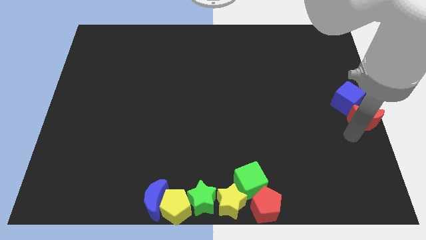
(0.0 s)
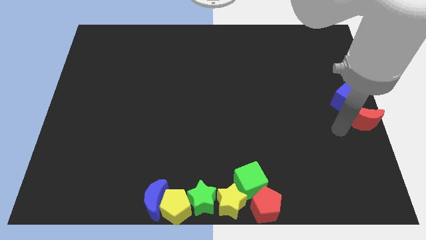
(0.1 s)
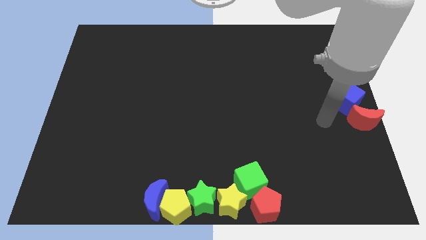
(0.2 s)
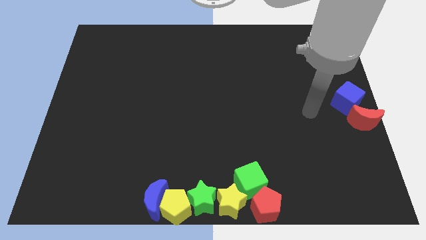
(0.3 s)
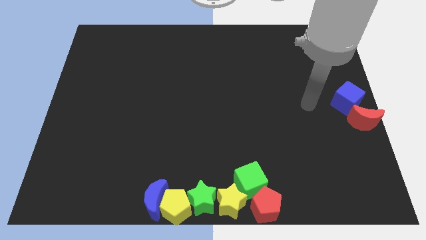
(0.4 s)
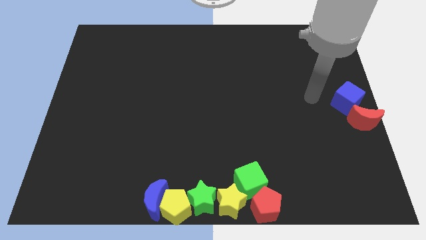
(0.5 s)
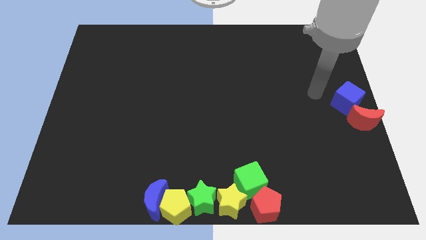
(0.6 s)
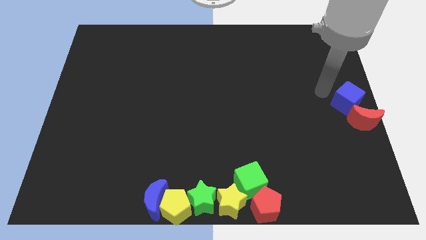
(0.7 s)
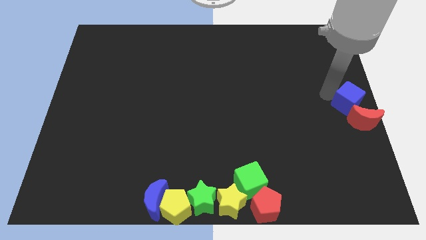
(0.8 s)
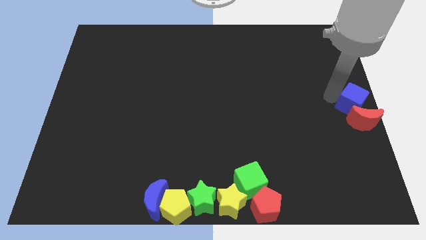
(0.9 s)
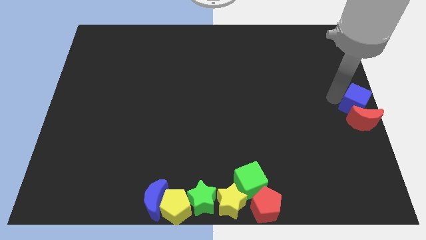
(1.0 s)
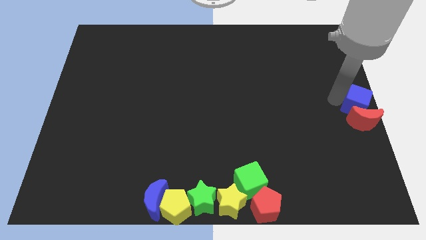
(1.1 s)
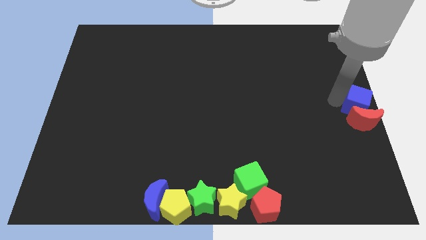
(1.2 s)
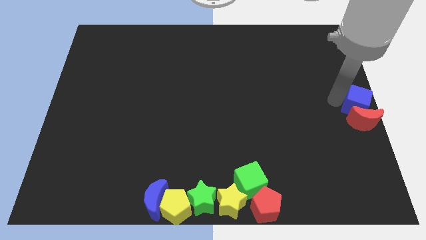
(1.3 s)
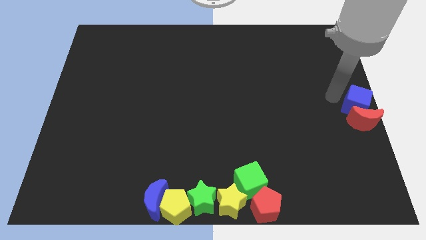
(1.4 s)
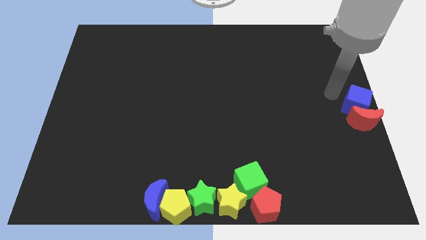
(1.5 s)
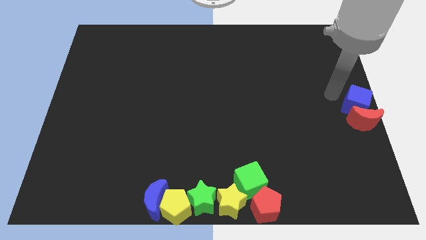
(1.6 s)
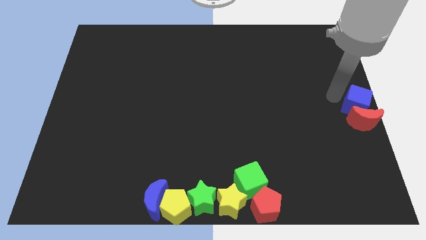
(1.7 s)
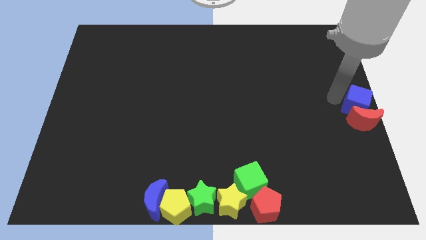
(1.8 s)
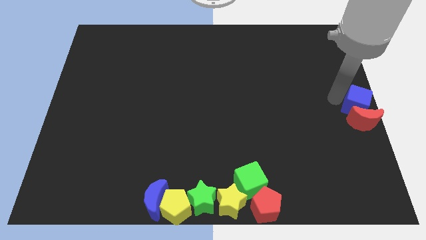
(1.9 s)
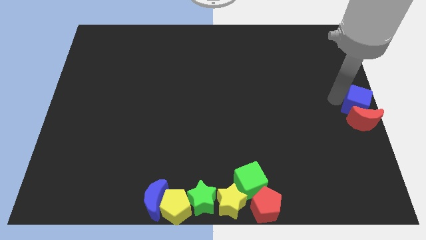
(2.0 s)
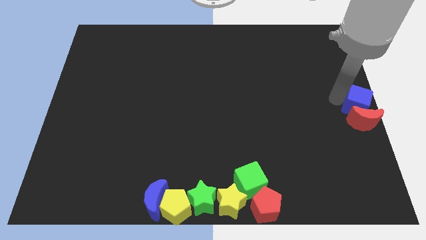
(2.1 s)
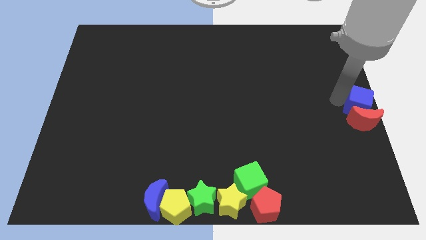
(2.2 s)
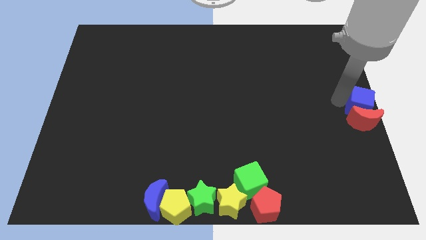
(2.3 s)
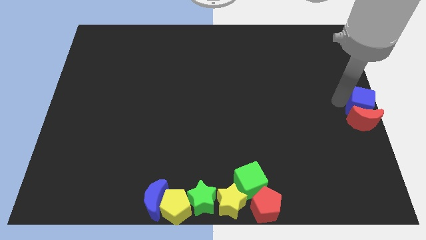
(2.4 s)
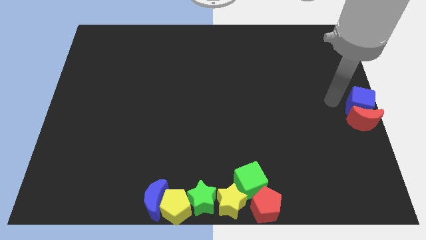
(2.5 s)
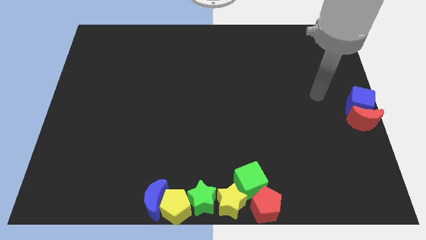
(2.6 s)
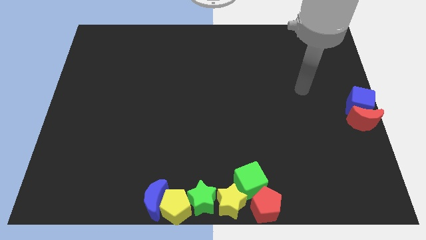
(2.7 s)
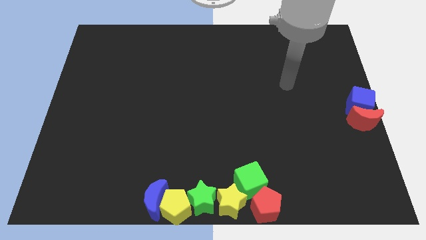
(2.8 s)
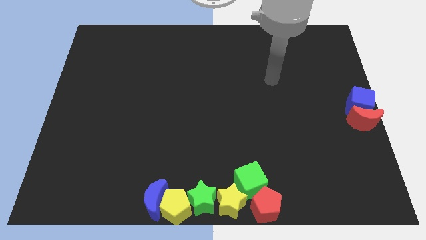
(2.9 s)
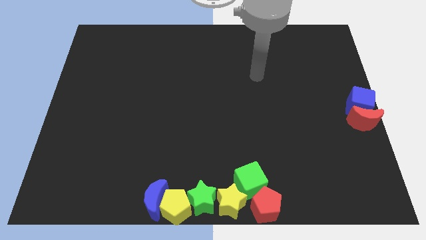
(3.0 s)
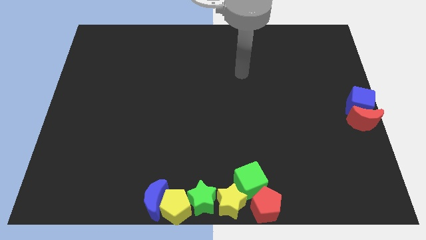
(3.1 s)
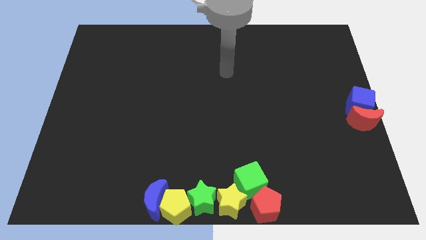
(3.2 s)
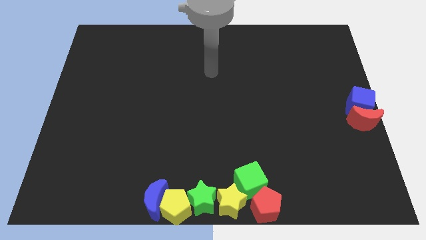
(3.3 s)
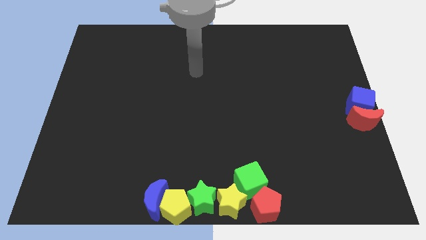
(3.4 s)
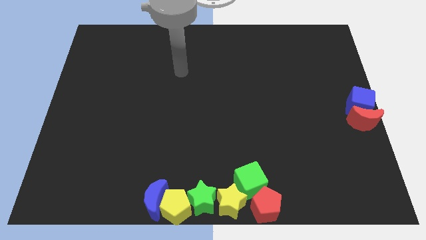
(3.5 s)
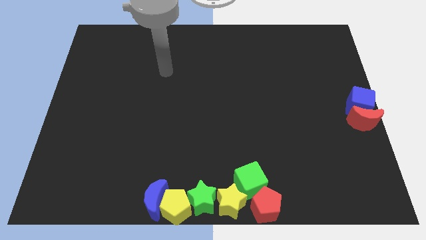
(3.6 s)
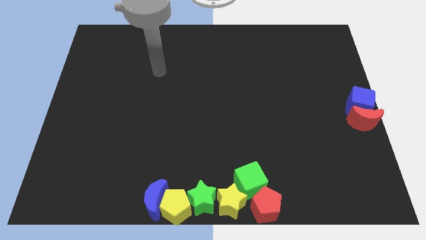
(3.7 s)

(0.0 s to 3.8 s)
move the blue cube near the red crescent

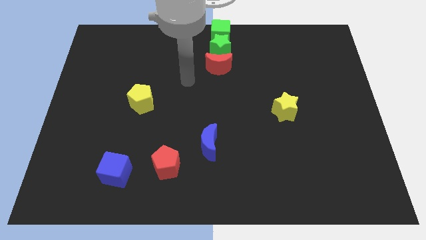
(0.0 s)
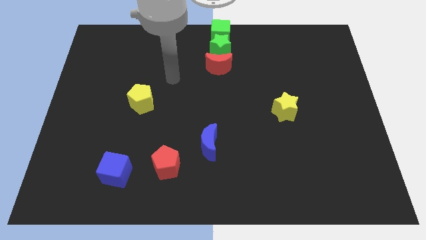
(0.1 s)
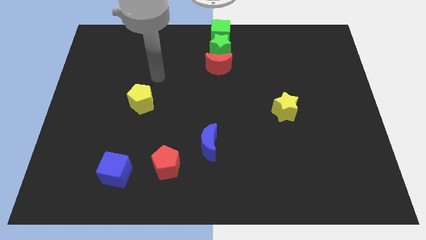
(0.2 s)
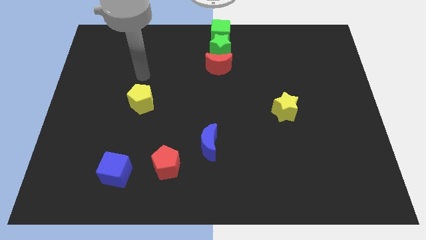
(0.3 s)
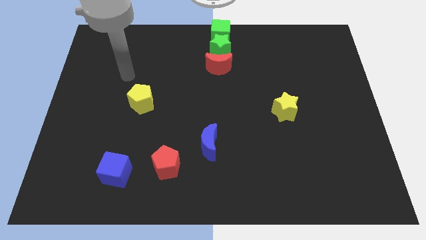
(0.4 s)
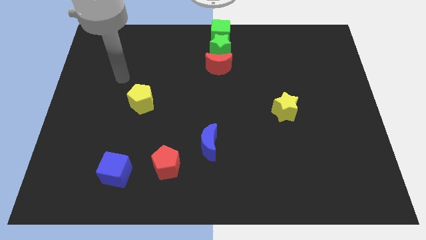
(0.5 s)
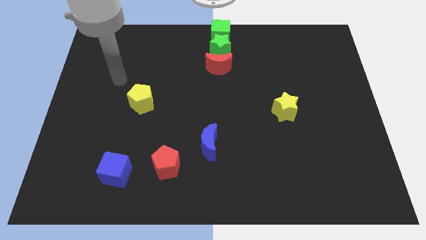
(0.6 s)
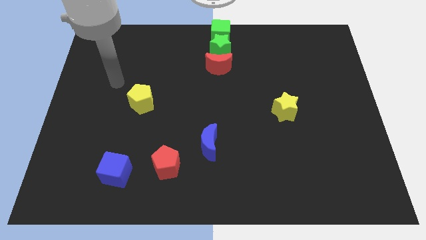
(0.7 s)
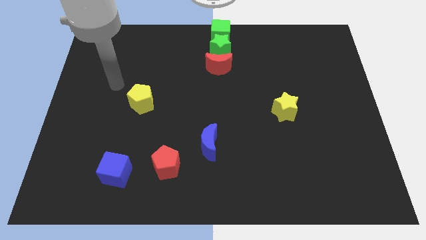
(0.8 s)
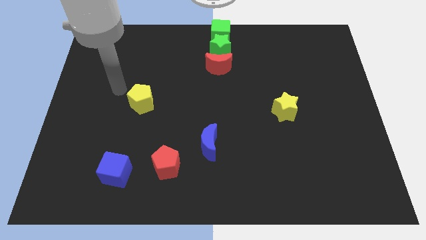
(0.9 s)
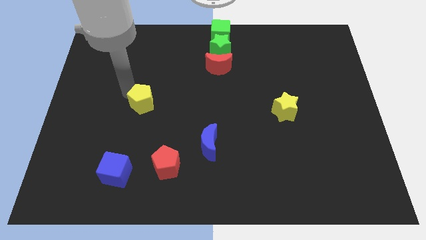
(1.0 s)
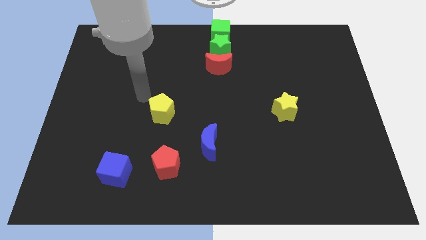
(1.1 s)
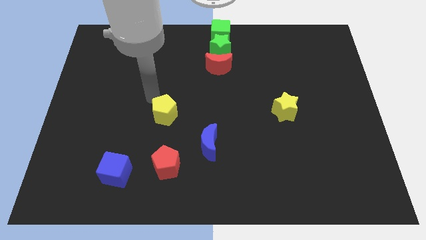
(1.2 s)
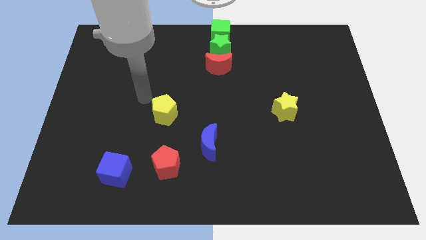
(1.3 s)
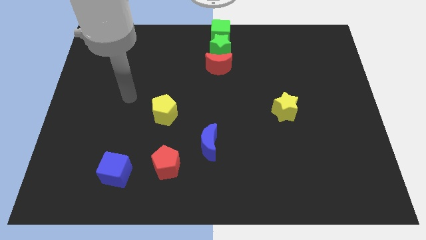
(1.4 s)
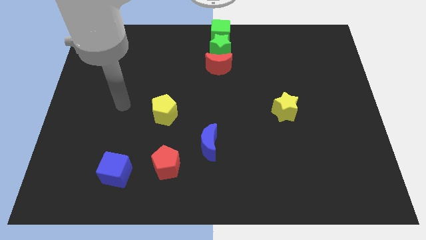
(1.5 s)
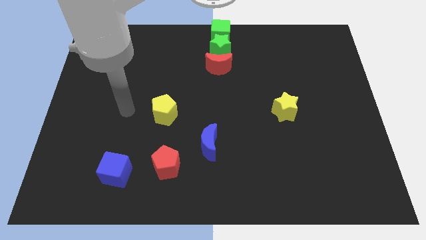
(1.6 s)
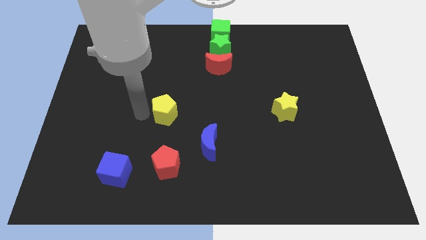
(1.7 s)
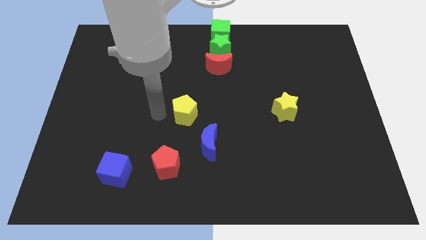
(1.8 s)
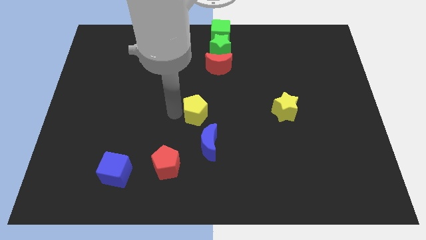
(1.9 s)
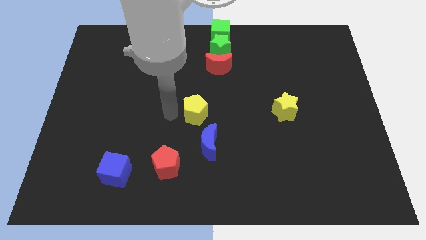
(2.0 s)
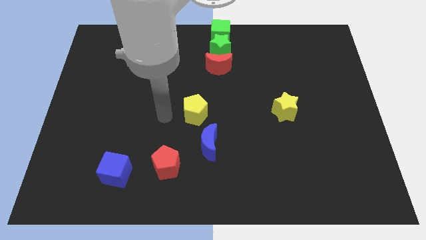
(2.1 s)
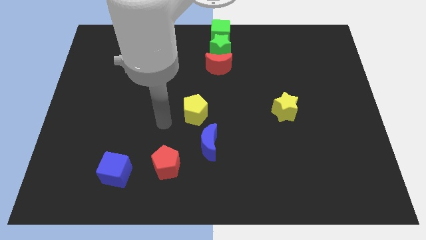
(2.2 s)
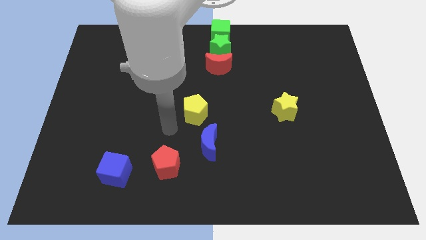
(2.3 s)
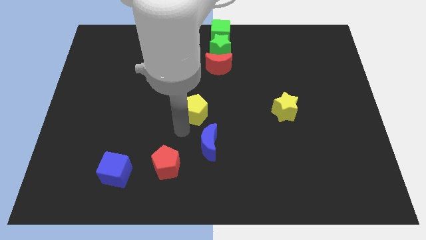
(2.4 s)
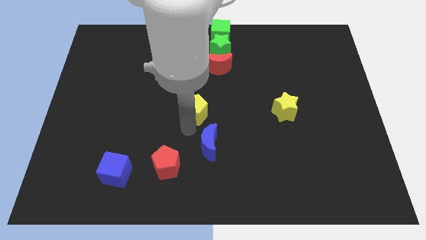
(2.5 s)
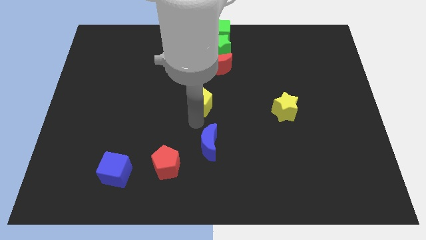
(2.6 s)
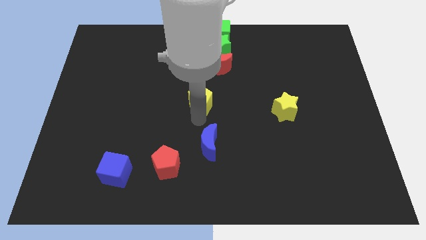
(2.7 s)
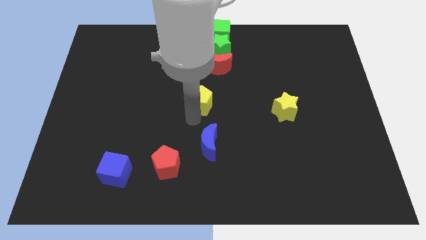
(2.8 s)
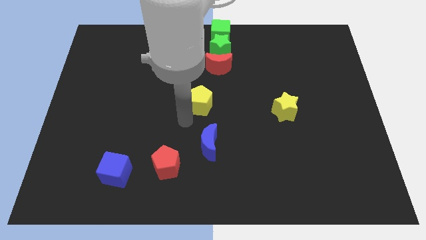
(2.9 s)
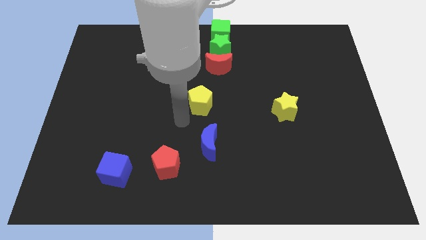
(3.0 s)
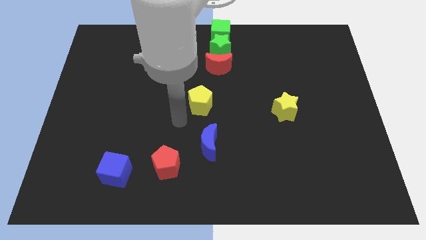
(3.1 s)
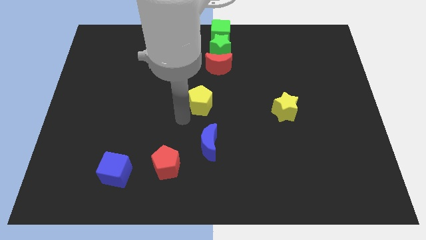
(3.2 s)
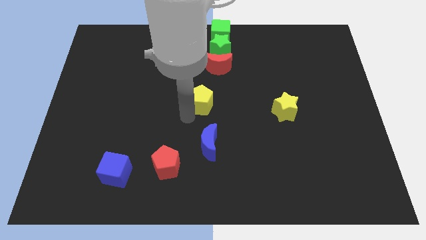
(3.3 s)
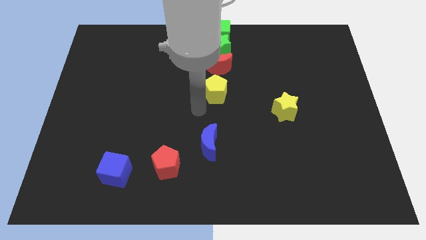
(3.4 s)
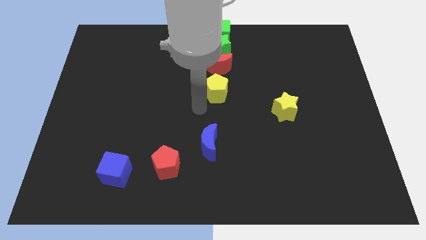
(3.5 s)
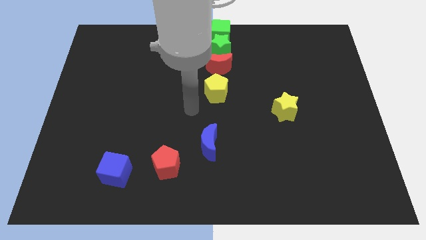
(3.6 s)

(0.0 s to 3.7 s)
slide the yellow pentagon vertically above the blue moon

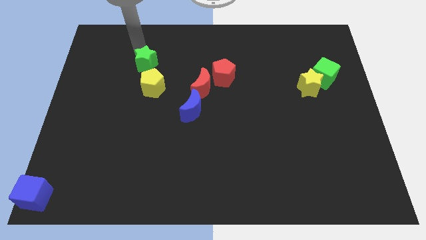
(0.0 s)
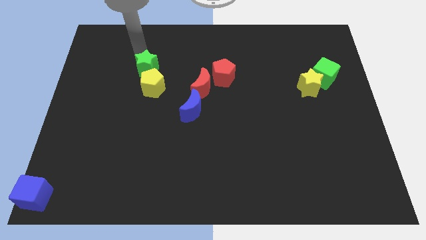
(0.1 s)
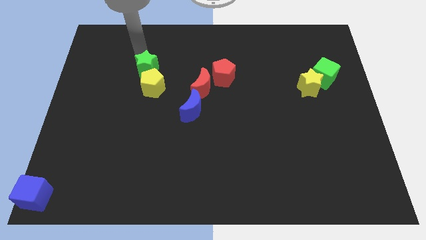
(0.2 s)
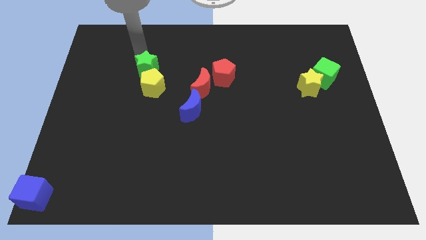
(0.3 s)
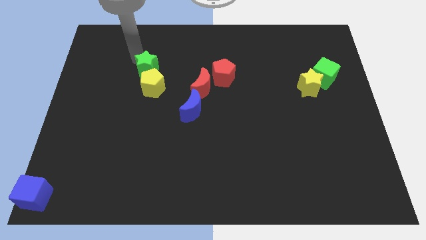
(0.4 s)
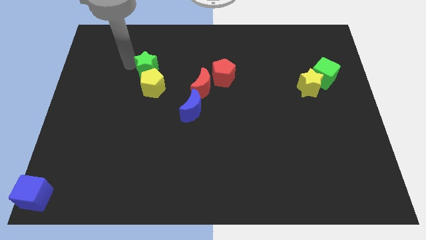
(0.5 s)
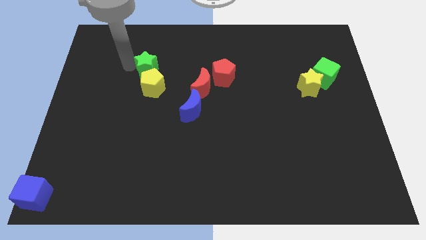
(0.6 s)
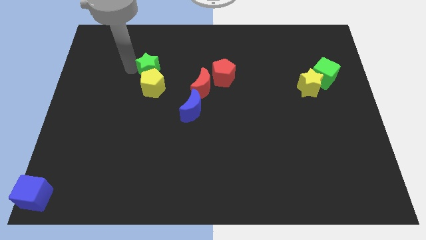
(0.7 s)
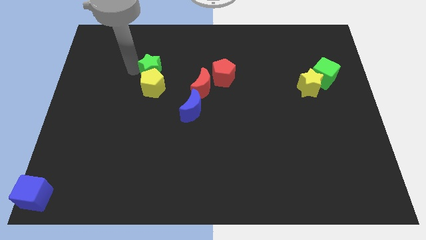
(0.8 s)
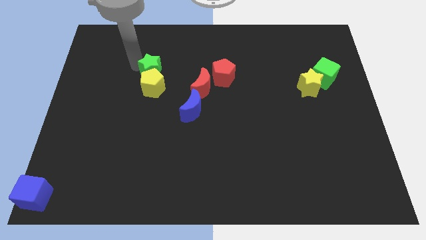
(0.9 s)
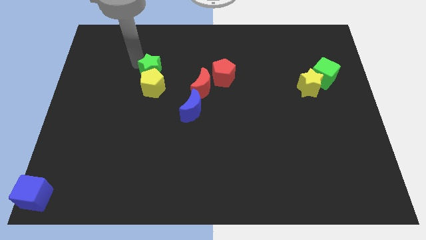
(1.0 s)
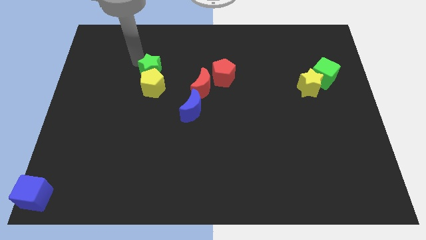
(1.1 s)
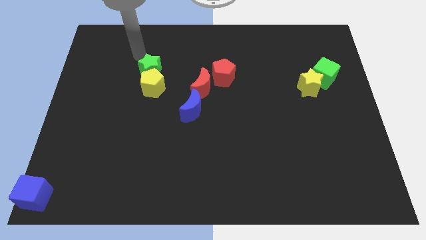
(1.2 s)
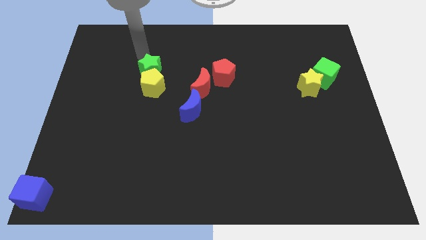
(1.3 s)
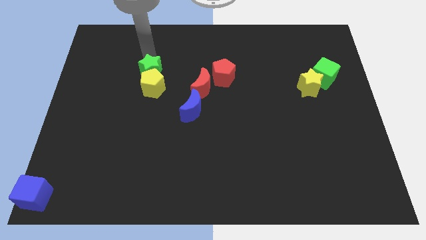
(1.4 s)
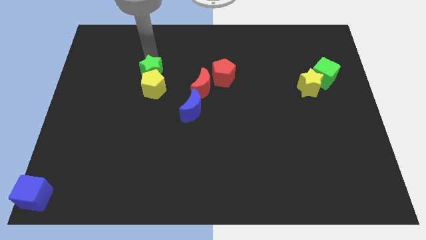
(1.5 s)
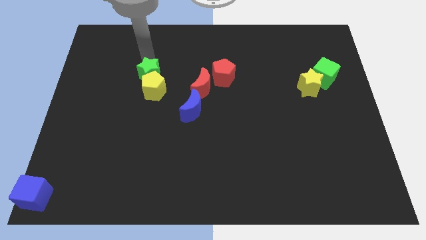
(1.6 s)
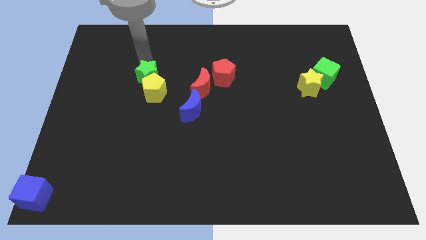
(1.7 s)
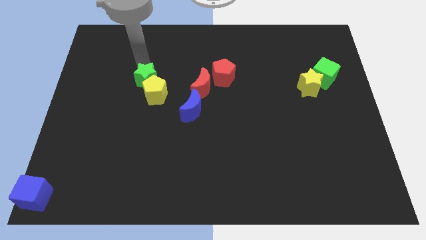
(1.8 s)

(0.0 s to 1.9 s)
slide the green star into the yellow pentagon
